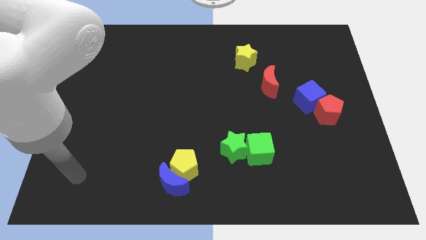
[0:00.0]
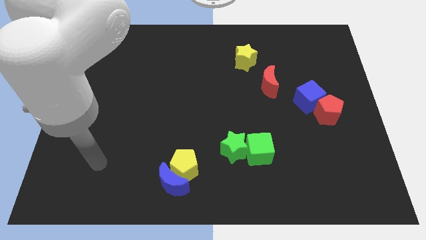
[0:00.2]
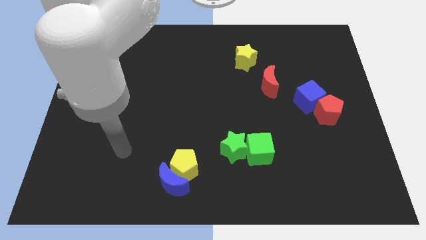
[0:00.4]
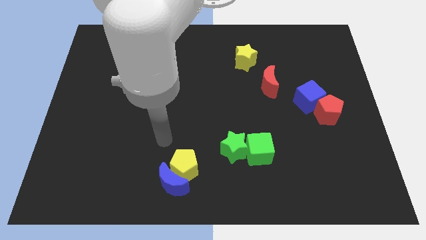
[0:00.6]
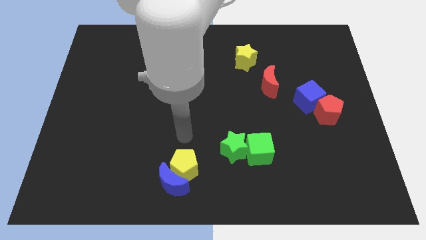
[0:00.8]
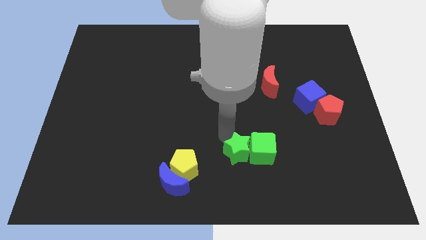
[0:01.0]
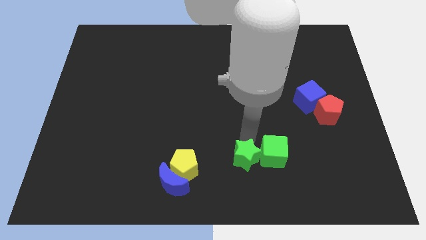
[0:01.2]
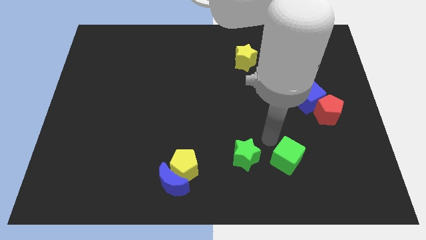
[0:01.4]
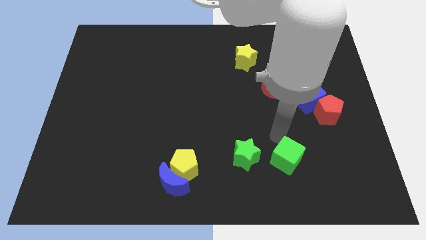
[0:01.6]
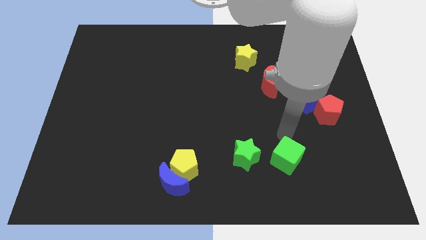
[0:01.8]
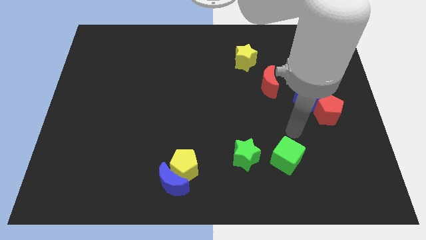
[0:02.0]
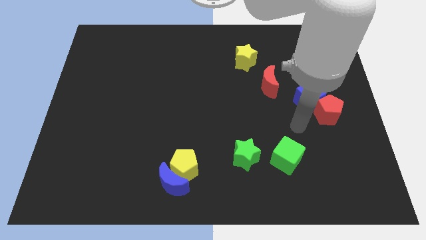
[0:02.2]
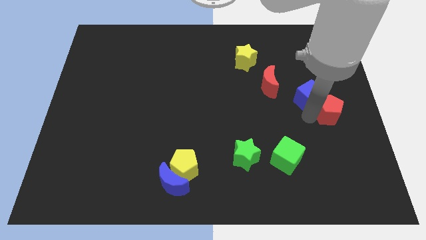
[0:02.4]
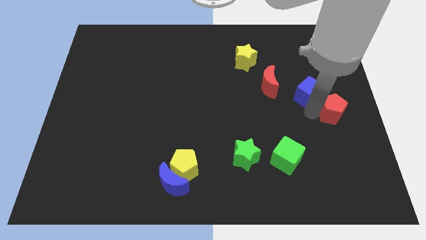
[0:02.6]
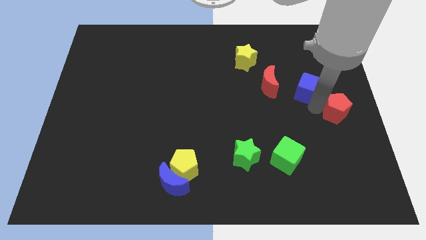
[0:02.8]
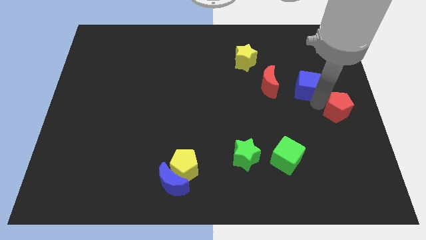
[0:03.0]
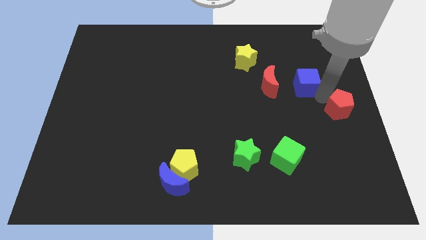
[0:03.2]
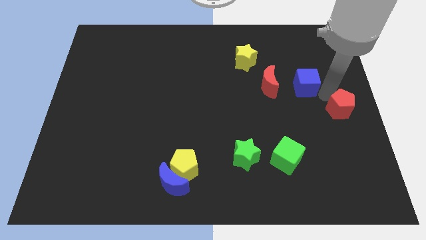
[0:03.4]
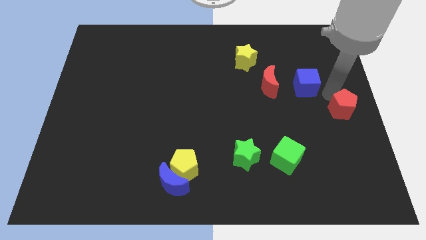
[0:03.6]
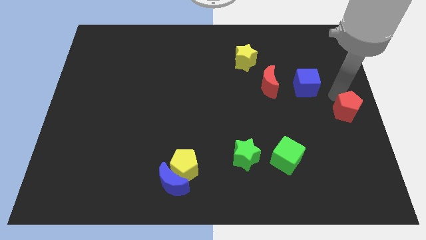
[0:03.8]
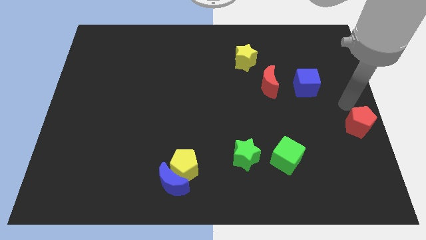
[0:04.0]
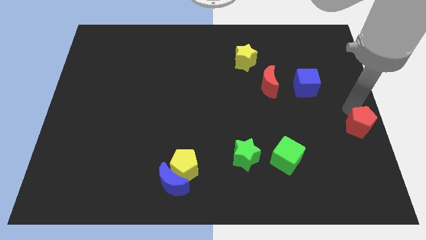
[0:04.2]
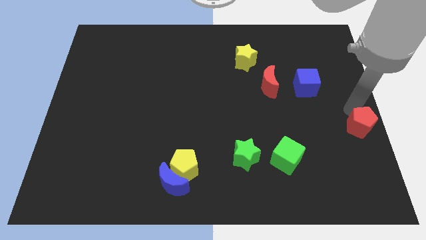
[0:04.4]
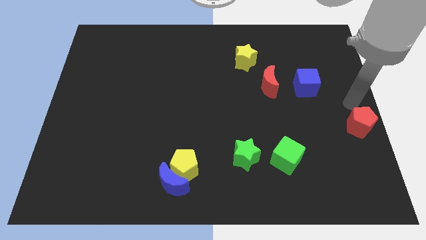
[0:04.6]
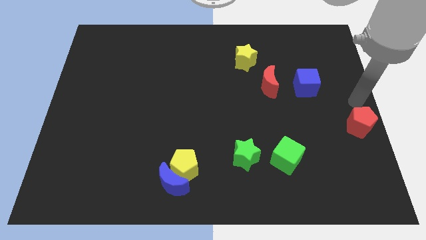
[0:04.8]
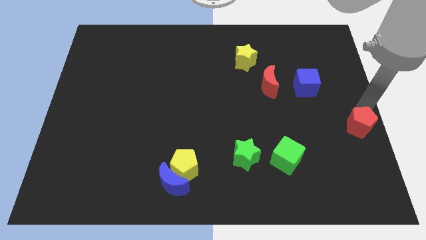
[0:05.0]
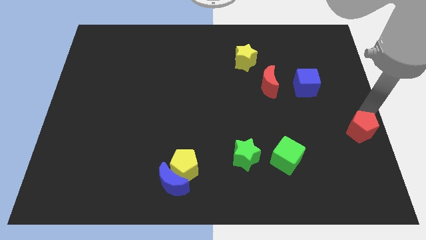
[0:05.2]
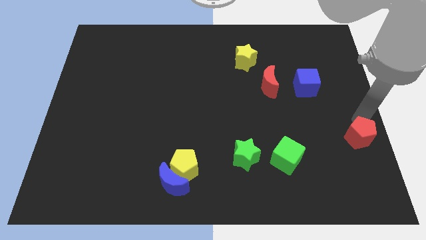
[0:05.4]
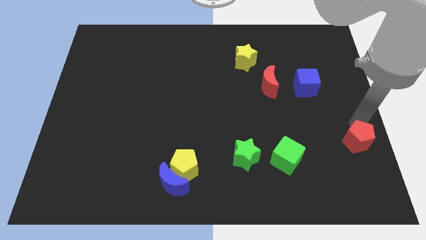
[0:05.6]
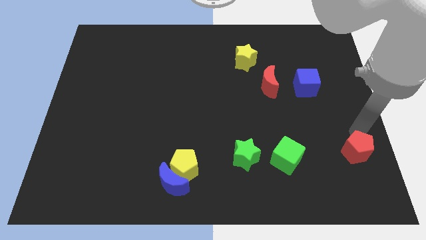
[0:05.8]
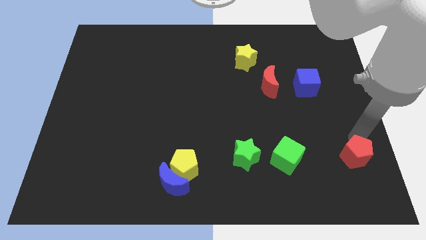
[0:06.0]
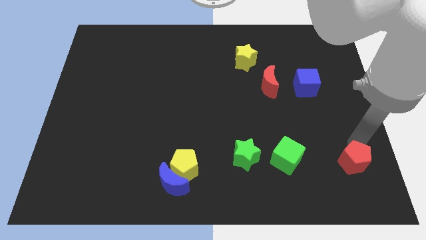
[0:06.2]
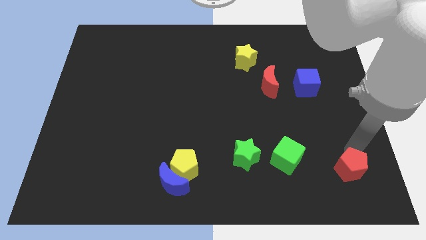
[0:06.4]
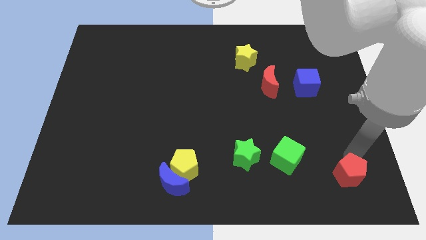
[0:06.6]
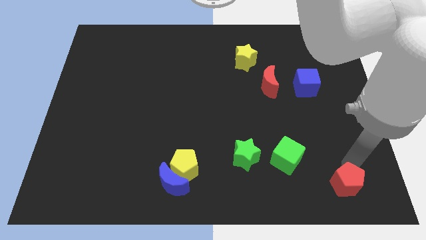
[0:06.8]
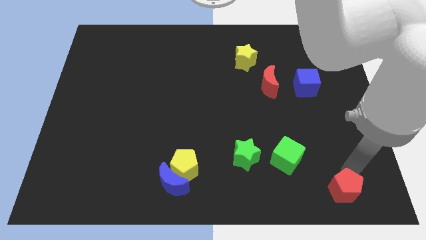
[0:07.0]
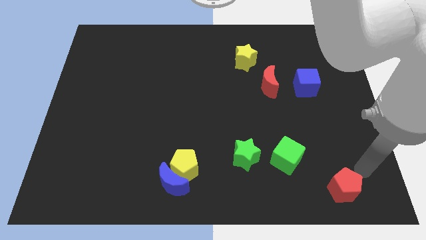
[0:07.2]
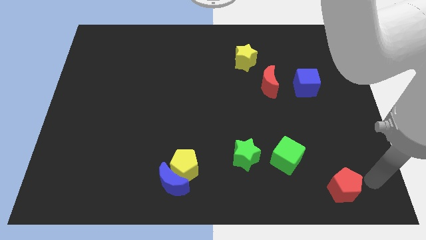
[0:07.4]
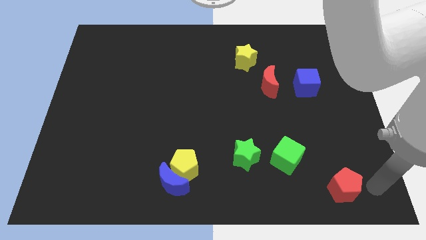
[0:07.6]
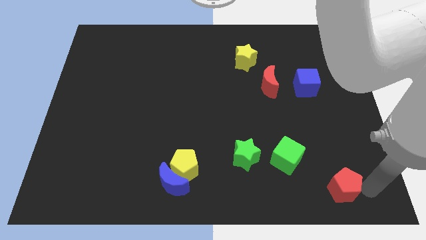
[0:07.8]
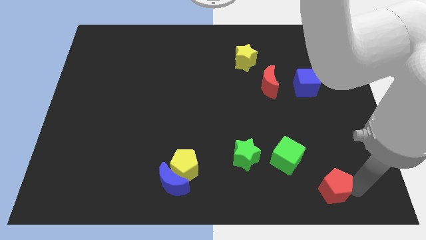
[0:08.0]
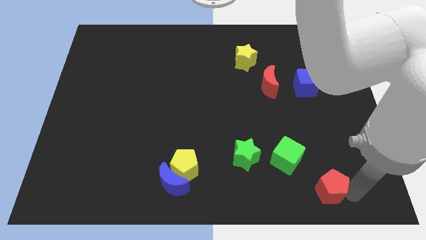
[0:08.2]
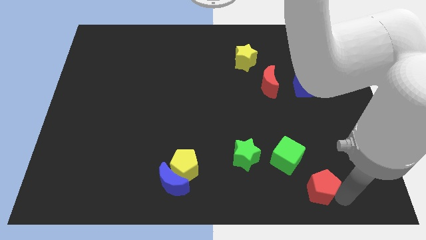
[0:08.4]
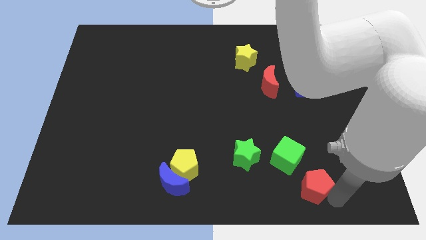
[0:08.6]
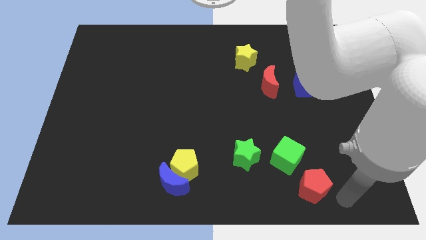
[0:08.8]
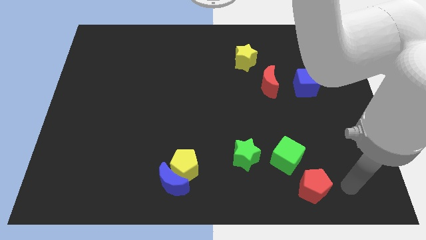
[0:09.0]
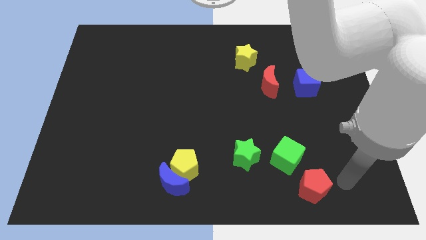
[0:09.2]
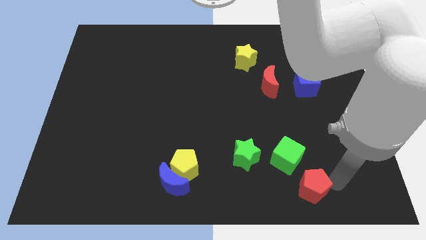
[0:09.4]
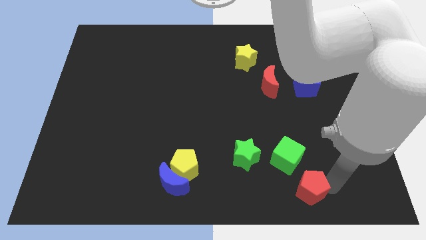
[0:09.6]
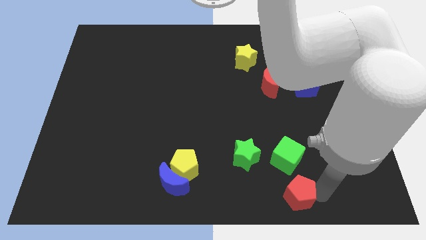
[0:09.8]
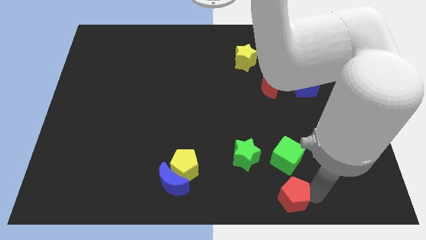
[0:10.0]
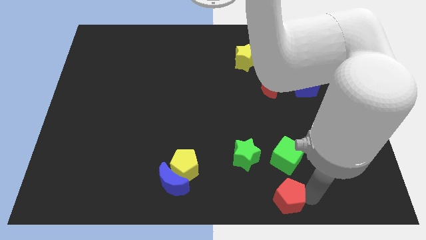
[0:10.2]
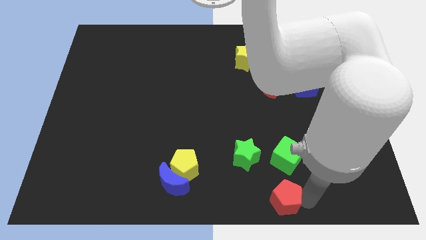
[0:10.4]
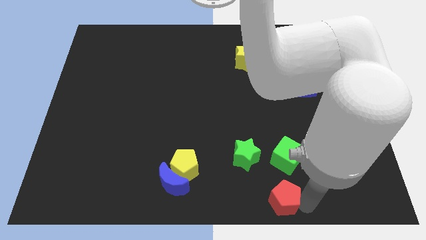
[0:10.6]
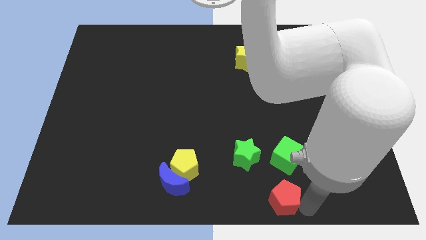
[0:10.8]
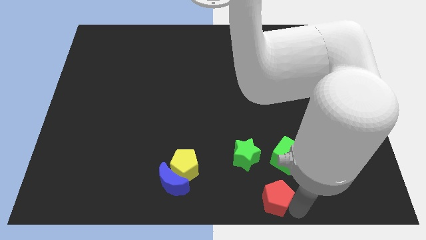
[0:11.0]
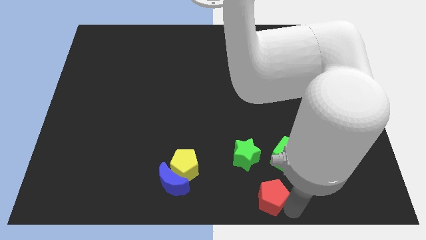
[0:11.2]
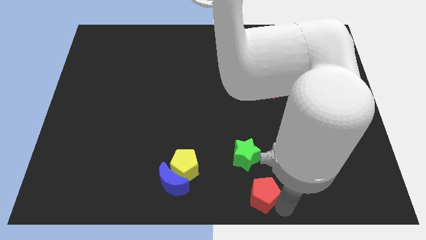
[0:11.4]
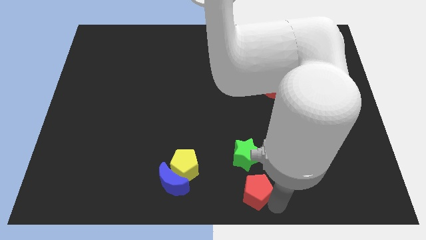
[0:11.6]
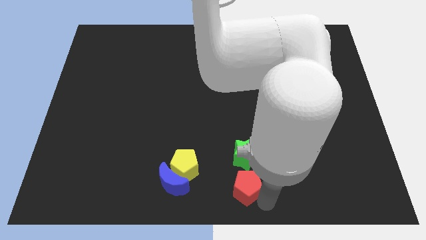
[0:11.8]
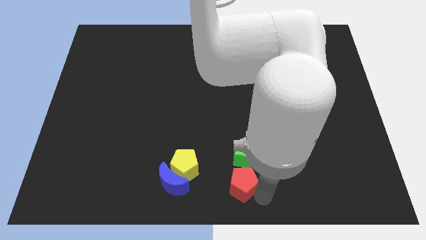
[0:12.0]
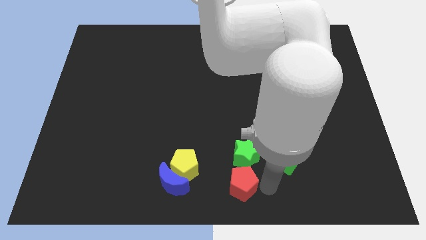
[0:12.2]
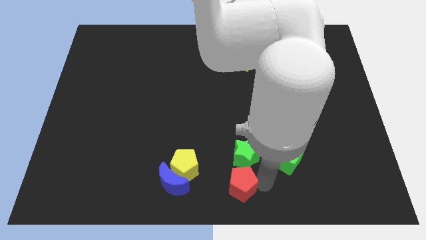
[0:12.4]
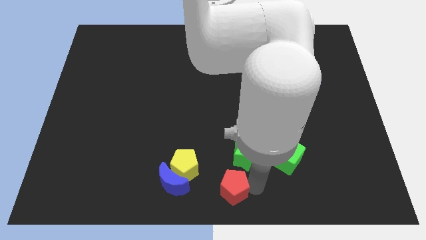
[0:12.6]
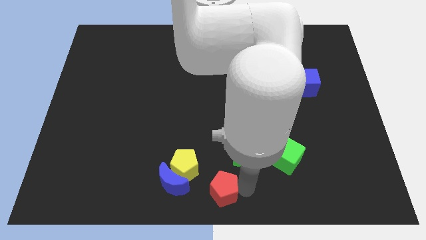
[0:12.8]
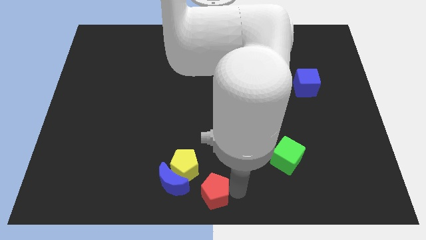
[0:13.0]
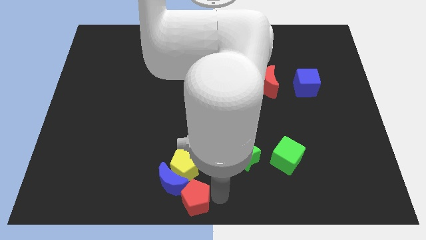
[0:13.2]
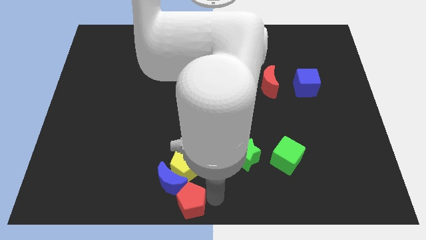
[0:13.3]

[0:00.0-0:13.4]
push the red pentagon close to the blue moon

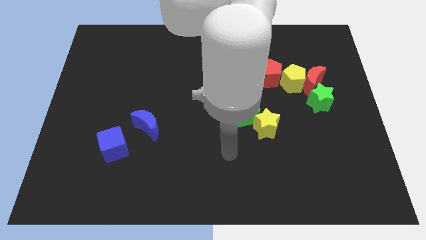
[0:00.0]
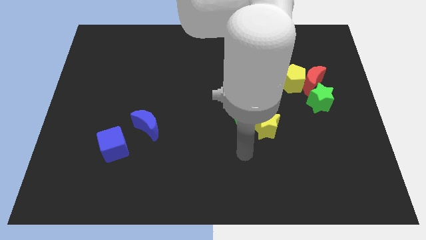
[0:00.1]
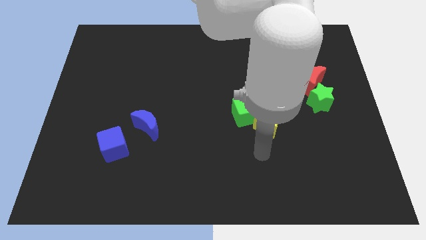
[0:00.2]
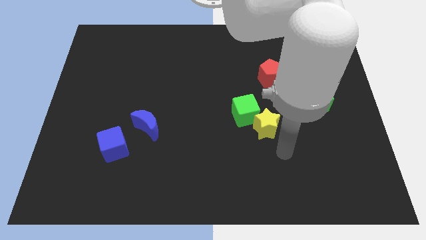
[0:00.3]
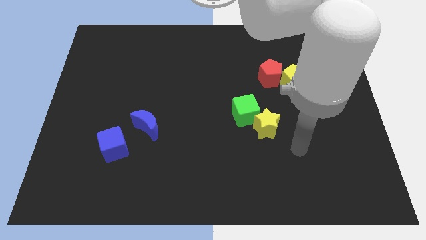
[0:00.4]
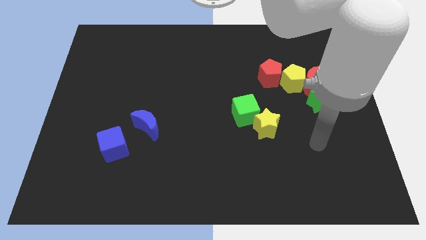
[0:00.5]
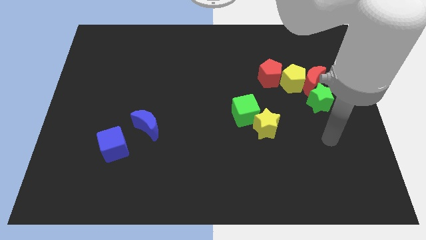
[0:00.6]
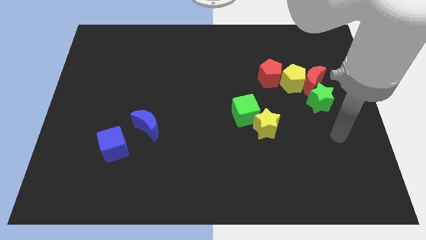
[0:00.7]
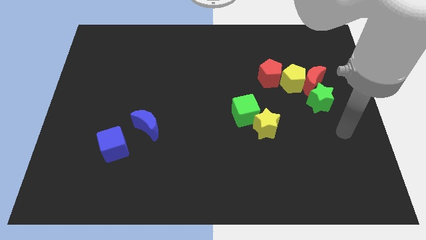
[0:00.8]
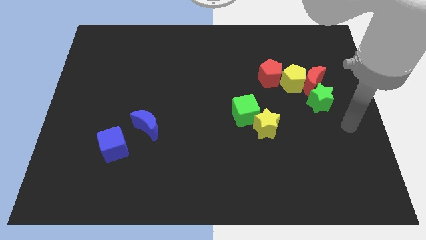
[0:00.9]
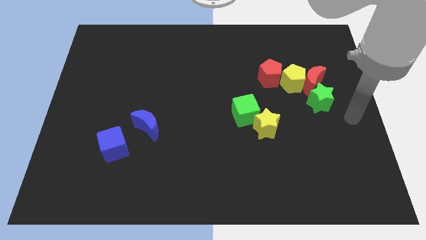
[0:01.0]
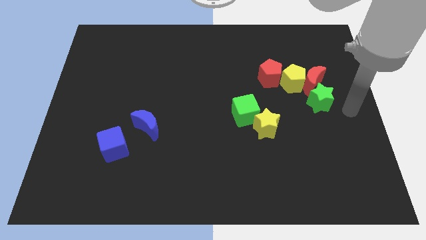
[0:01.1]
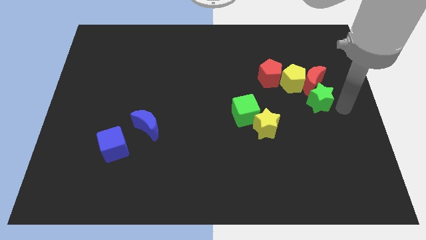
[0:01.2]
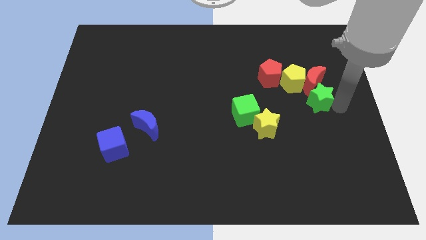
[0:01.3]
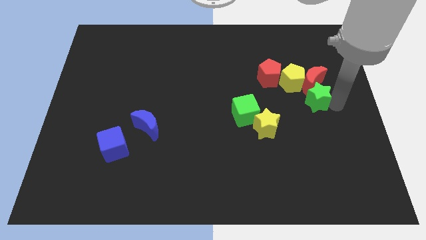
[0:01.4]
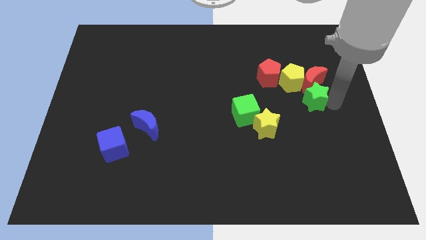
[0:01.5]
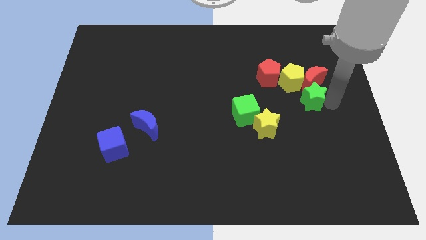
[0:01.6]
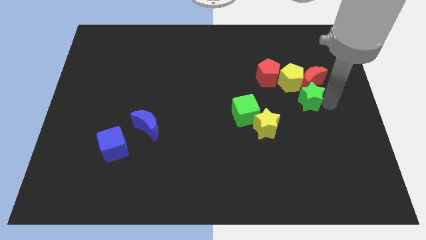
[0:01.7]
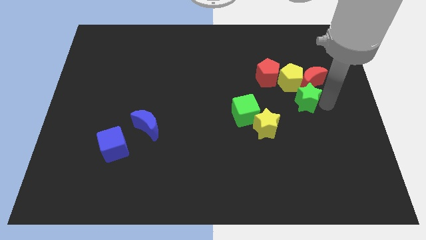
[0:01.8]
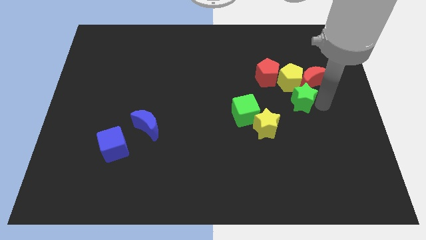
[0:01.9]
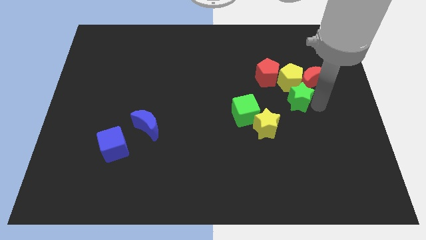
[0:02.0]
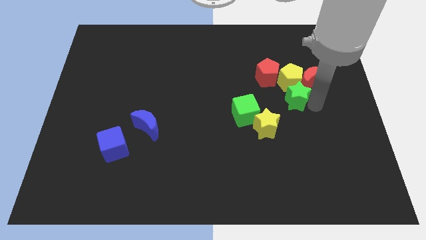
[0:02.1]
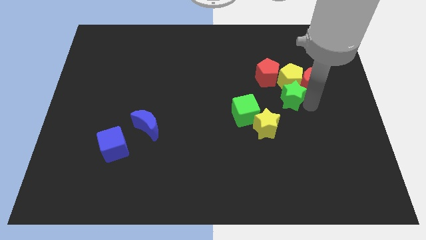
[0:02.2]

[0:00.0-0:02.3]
put the green star to the yellow pentagon
